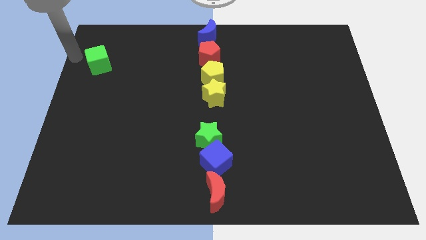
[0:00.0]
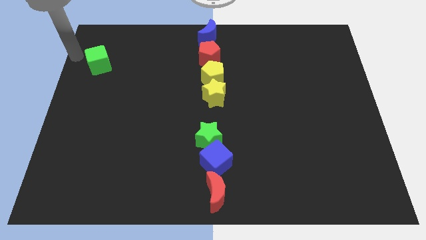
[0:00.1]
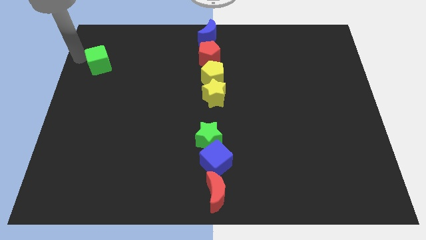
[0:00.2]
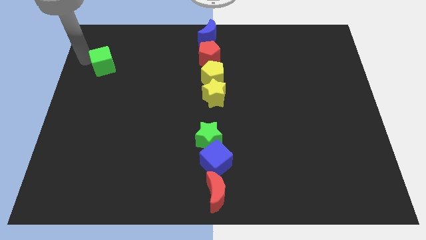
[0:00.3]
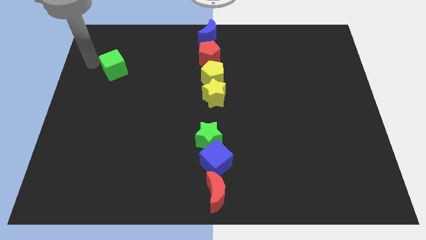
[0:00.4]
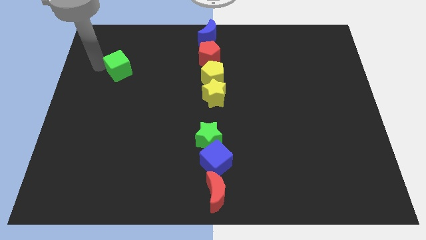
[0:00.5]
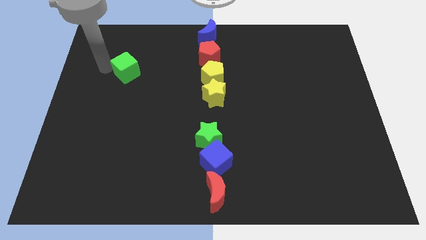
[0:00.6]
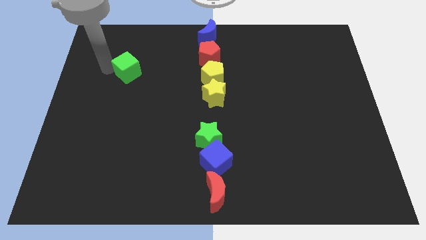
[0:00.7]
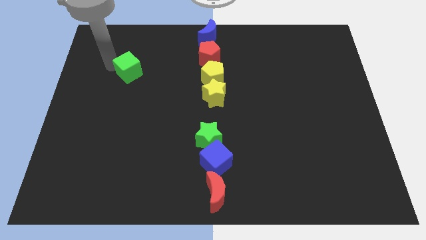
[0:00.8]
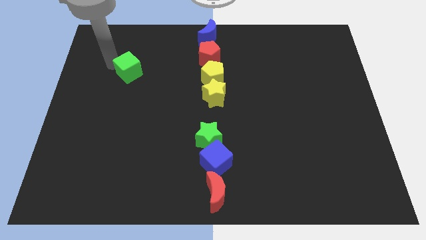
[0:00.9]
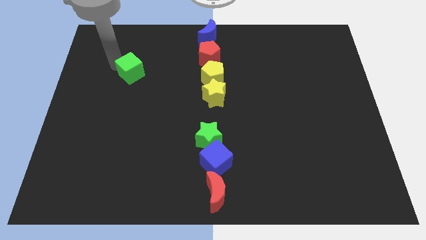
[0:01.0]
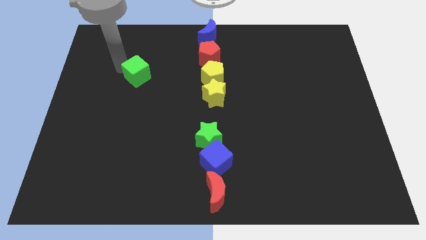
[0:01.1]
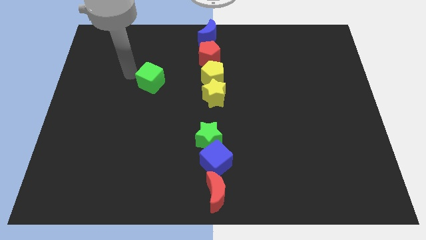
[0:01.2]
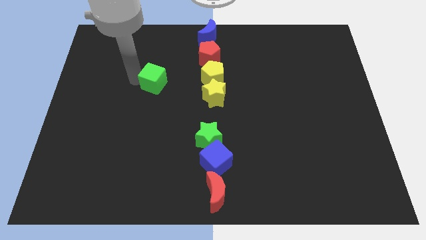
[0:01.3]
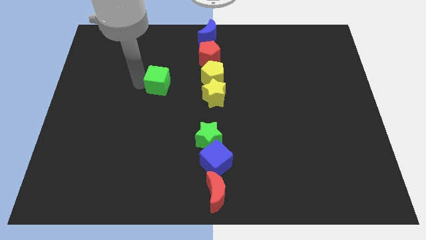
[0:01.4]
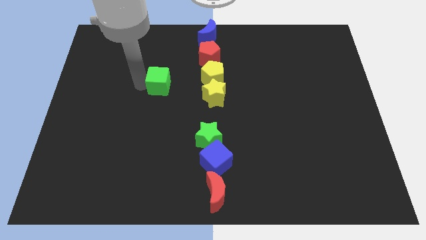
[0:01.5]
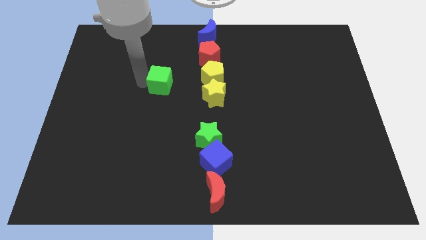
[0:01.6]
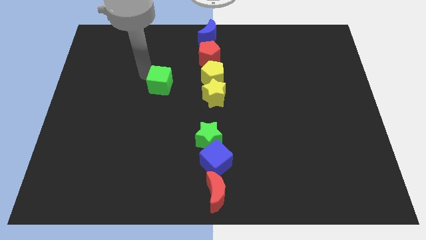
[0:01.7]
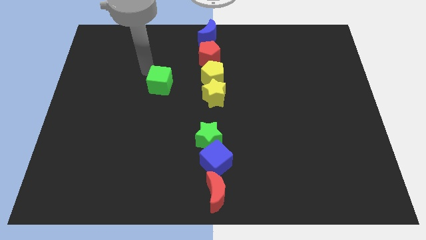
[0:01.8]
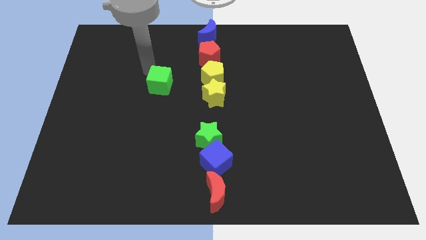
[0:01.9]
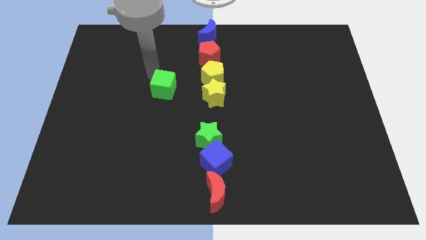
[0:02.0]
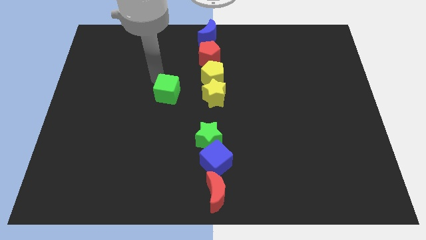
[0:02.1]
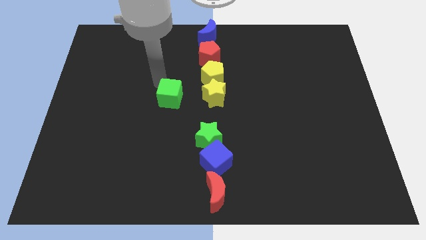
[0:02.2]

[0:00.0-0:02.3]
move the green cube parallel to the yellow star

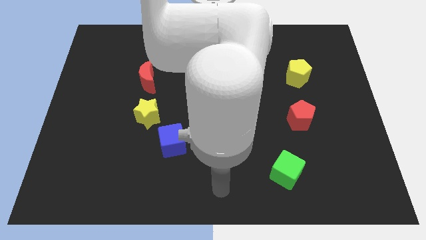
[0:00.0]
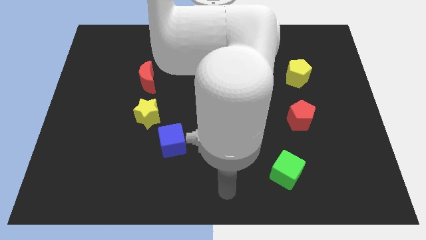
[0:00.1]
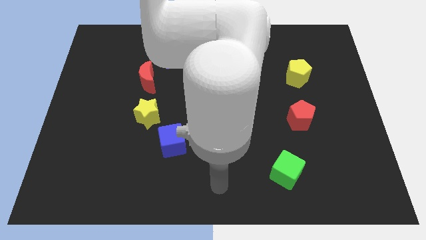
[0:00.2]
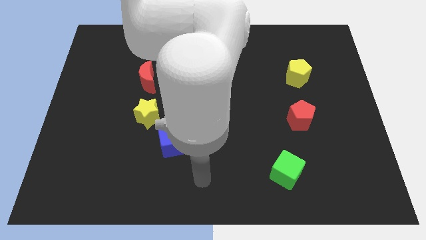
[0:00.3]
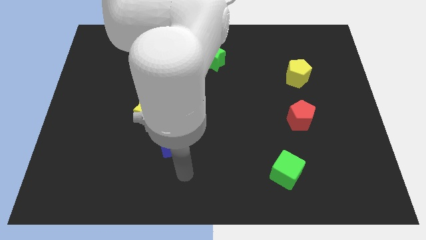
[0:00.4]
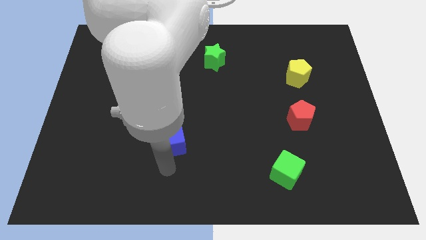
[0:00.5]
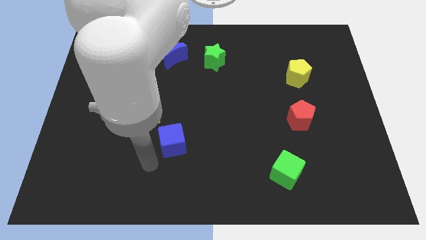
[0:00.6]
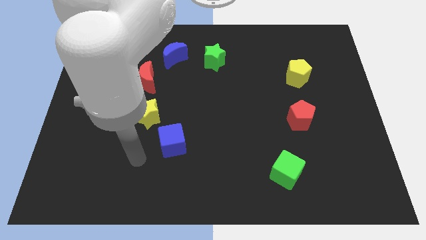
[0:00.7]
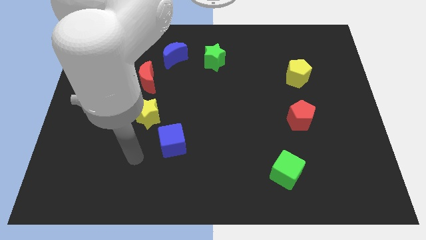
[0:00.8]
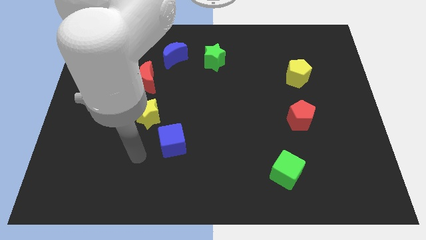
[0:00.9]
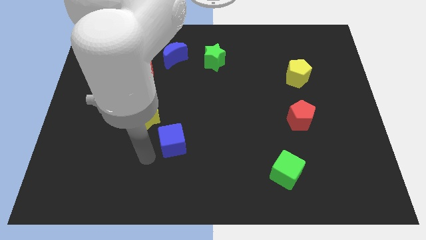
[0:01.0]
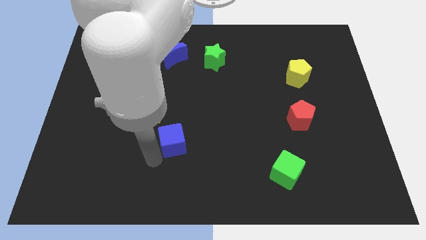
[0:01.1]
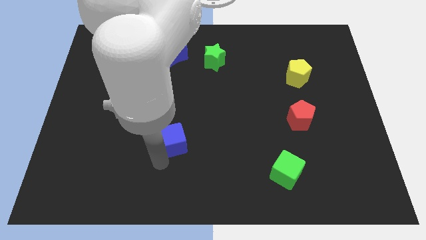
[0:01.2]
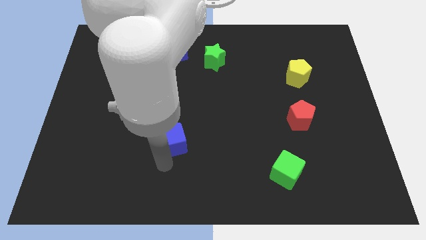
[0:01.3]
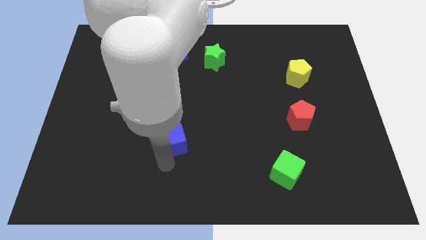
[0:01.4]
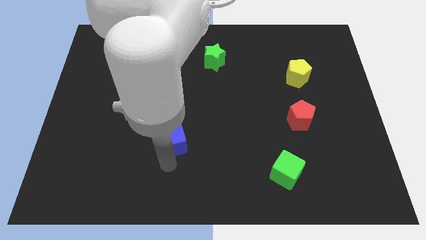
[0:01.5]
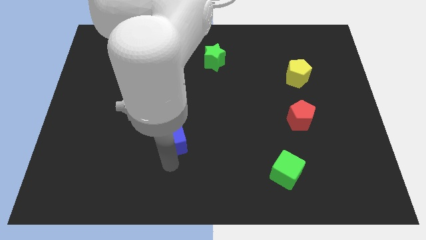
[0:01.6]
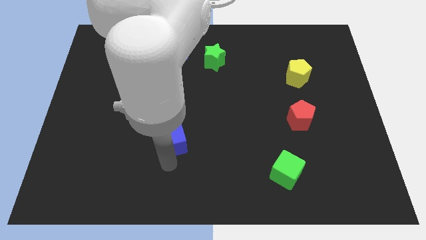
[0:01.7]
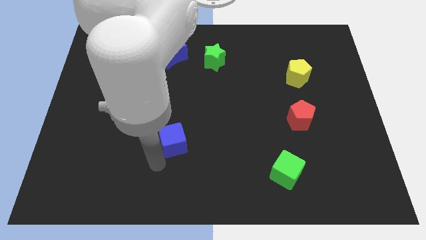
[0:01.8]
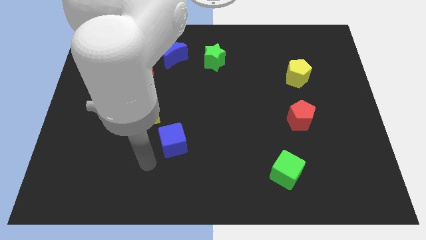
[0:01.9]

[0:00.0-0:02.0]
touch the blue cube

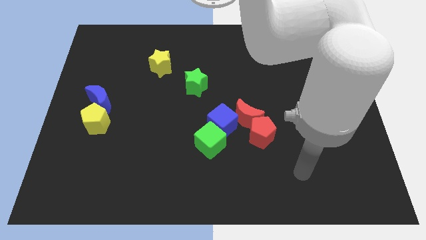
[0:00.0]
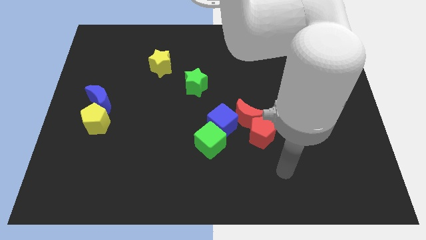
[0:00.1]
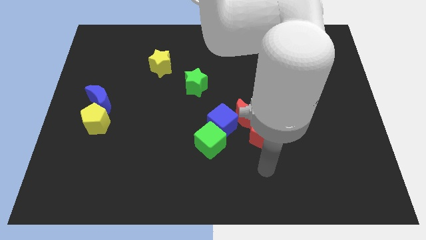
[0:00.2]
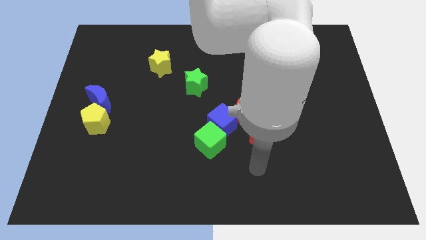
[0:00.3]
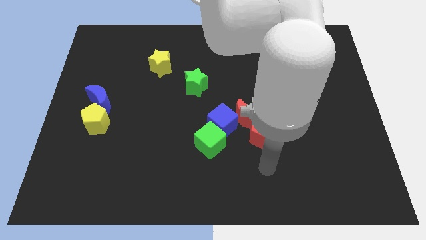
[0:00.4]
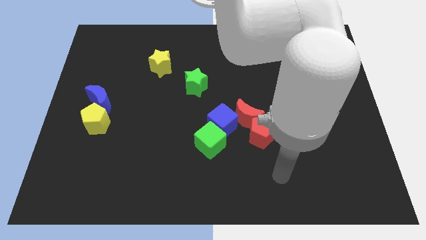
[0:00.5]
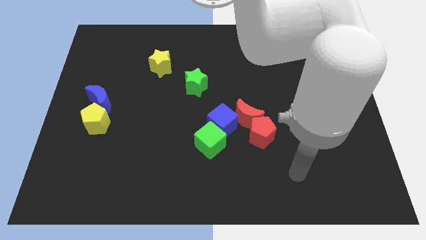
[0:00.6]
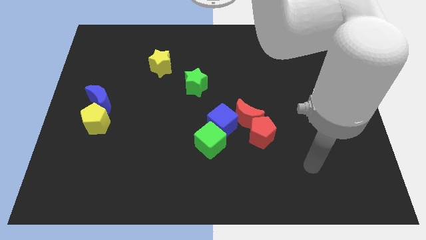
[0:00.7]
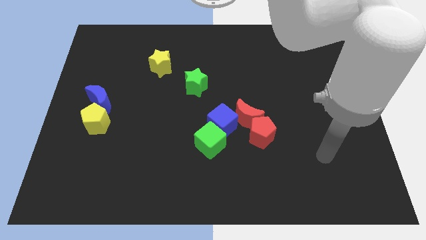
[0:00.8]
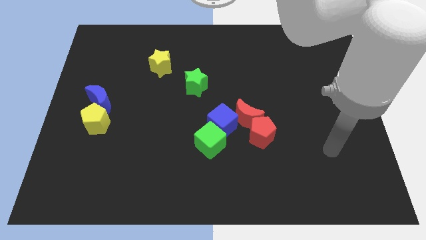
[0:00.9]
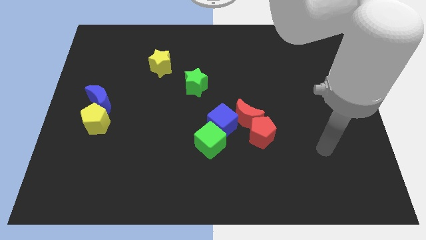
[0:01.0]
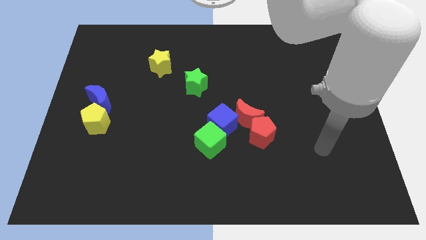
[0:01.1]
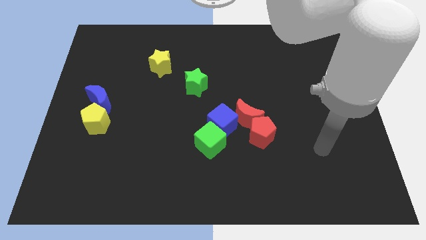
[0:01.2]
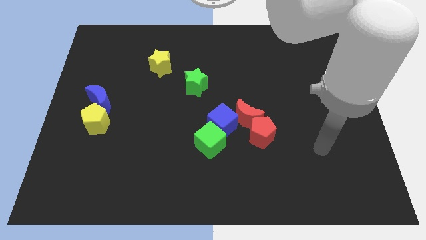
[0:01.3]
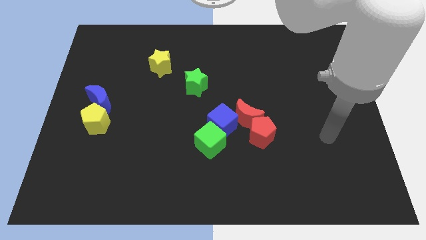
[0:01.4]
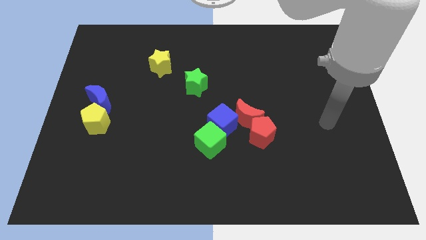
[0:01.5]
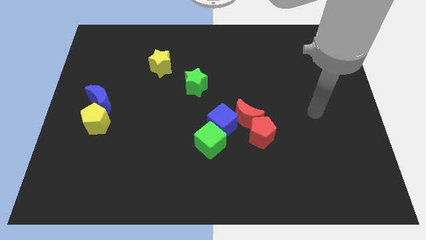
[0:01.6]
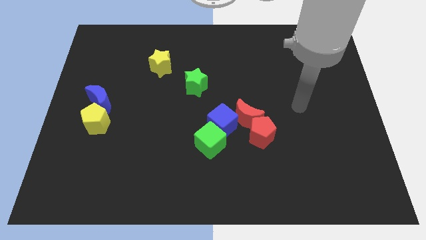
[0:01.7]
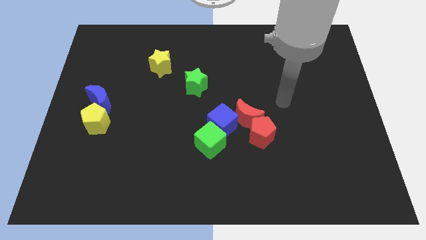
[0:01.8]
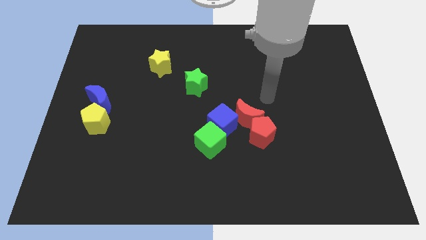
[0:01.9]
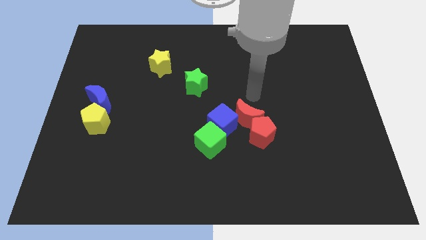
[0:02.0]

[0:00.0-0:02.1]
move your arm towards the red moon

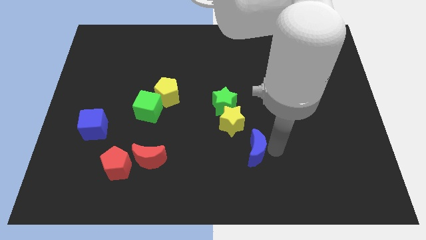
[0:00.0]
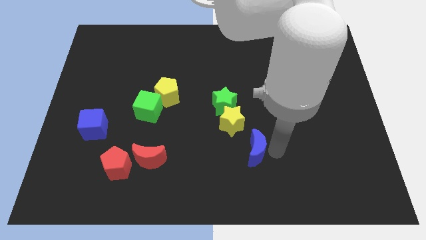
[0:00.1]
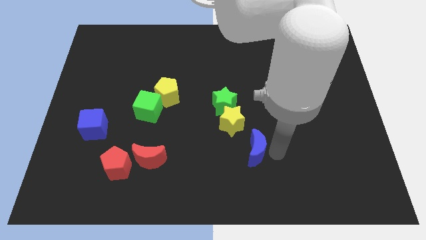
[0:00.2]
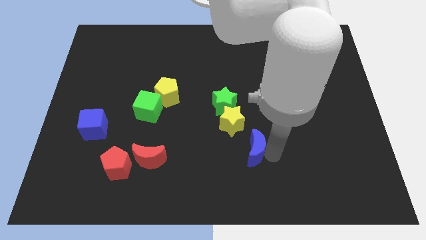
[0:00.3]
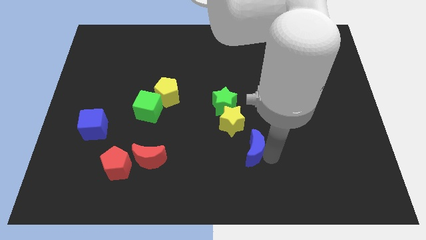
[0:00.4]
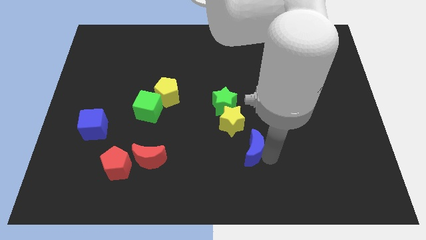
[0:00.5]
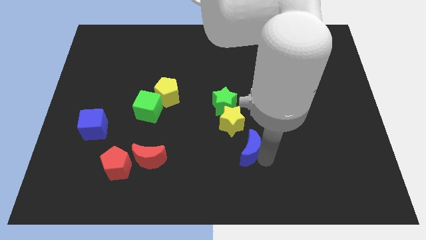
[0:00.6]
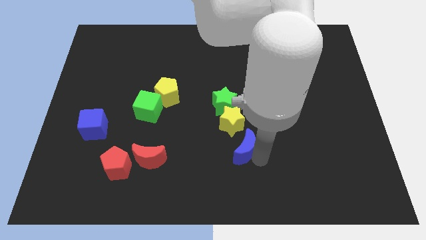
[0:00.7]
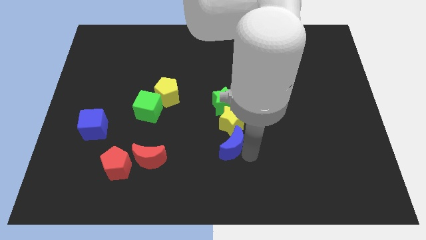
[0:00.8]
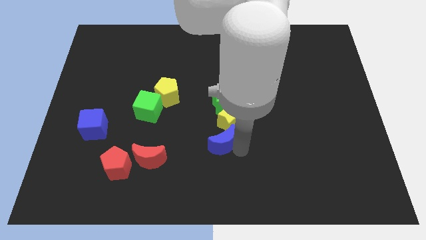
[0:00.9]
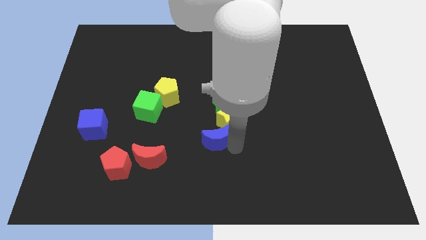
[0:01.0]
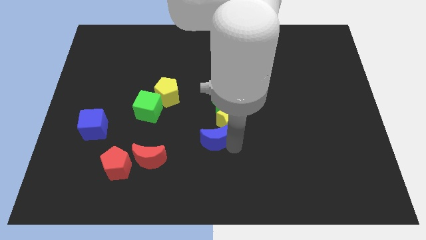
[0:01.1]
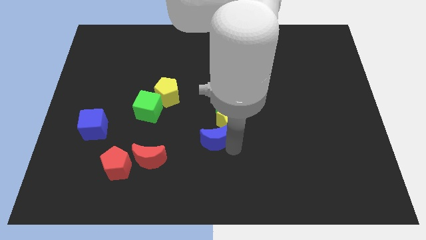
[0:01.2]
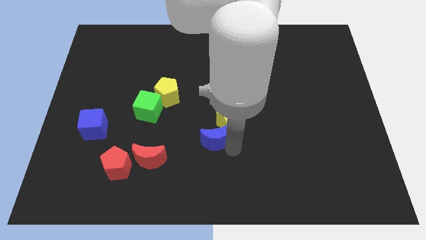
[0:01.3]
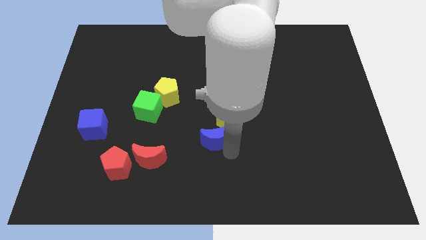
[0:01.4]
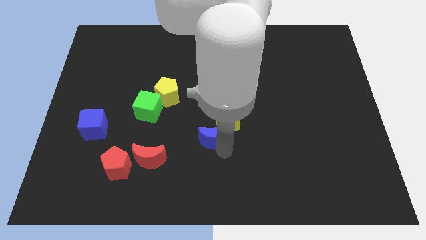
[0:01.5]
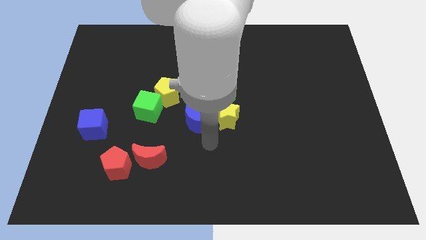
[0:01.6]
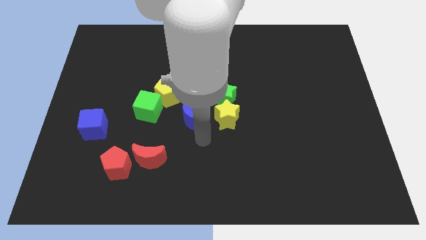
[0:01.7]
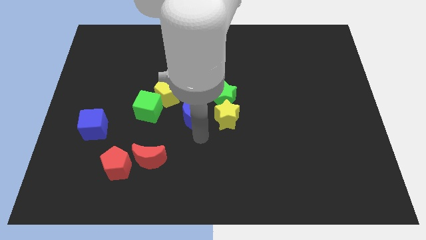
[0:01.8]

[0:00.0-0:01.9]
push the blue crescent to the left of the yellow star

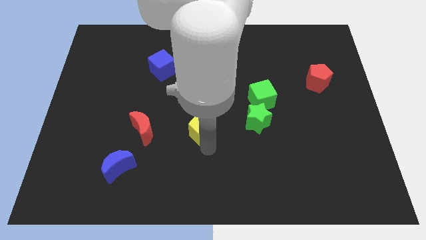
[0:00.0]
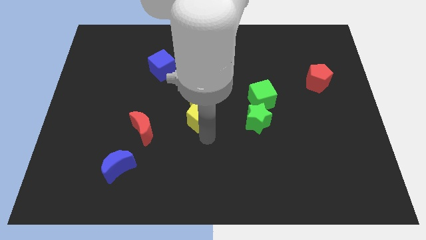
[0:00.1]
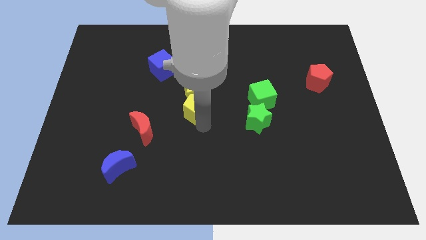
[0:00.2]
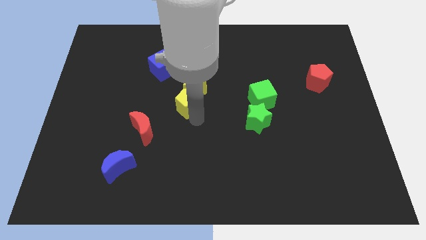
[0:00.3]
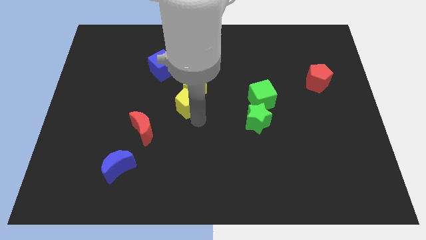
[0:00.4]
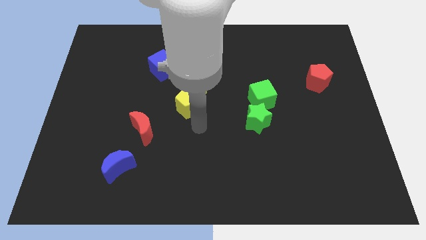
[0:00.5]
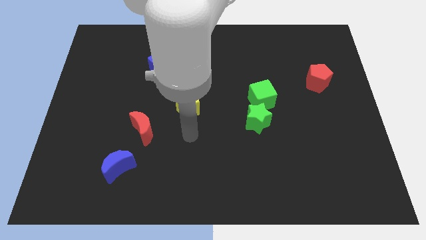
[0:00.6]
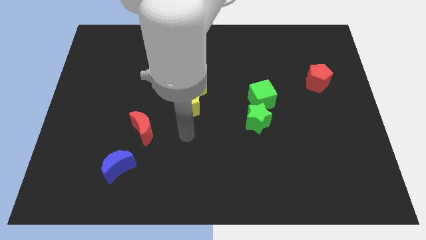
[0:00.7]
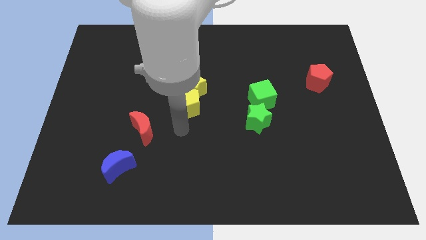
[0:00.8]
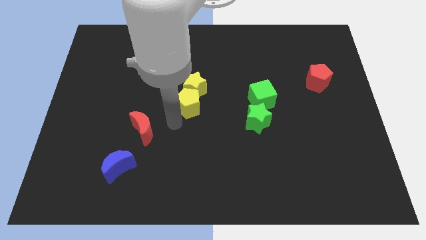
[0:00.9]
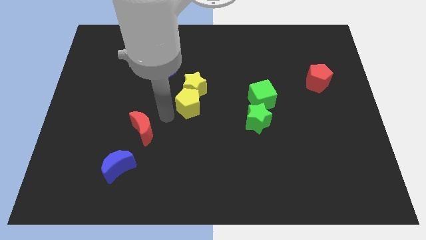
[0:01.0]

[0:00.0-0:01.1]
push the yellow pentagon into the yellow star
